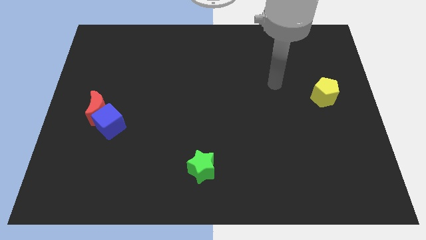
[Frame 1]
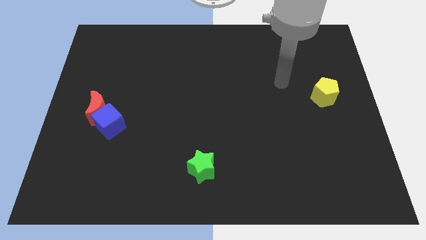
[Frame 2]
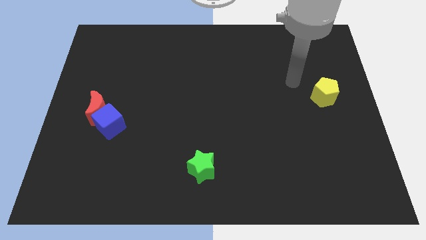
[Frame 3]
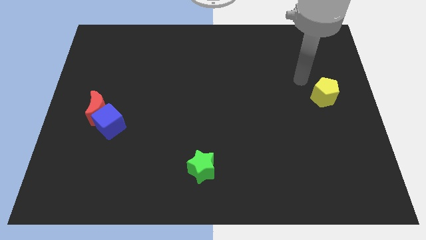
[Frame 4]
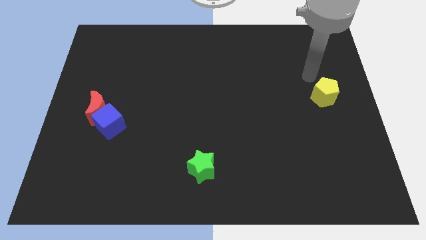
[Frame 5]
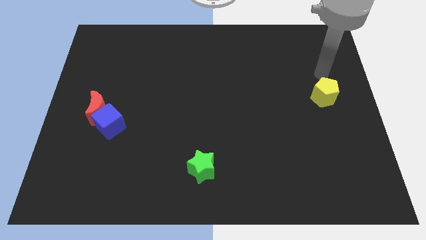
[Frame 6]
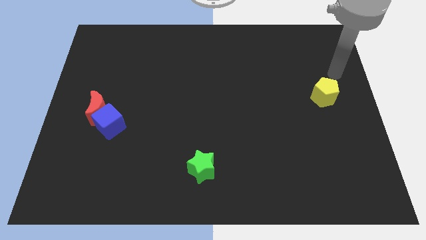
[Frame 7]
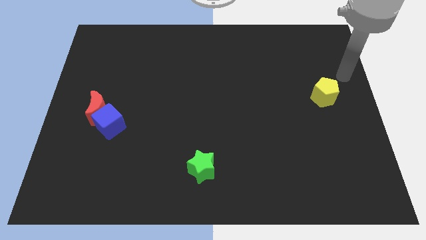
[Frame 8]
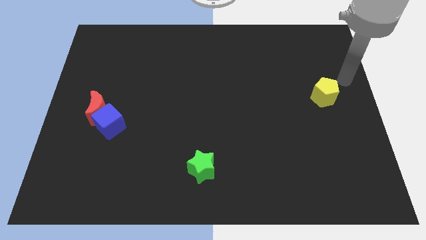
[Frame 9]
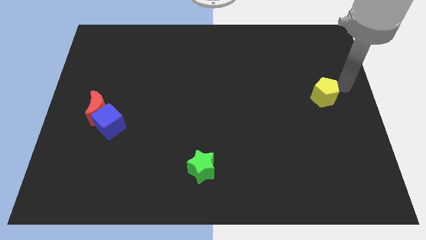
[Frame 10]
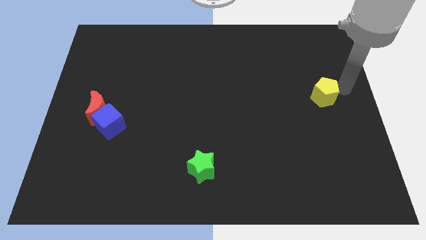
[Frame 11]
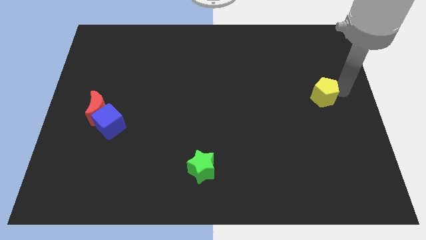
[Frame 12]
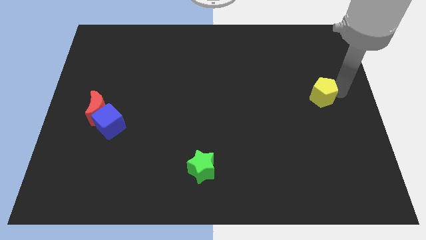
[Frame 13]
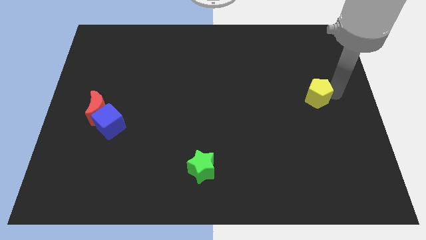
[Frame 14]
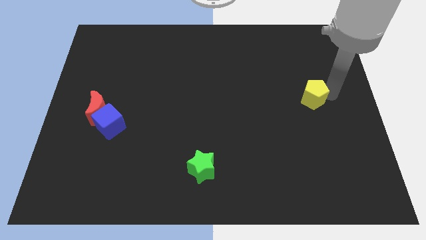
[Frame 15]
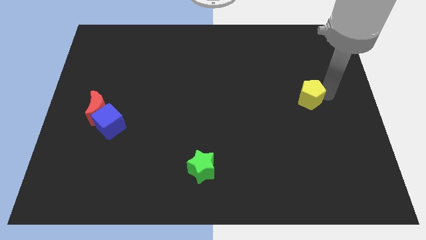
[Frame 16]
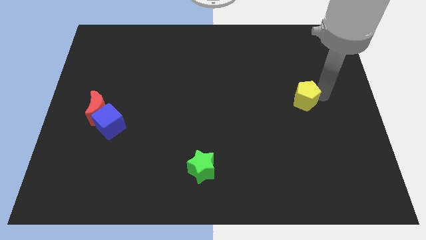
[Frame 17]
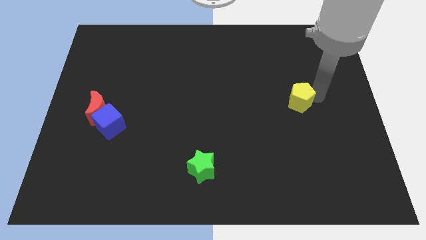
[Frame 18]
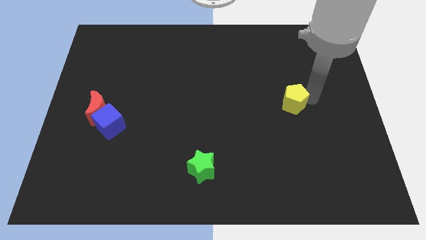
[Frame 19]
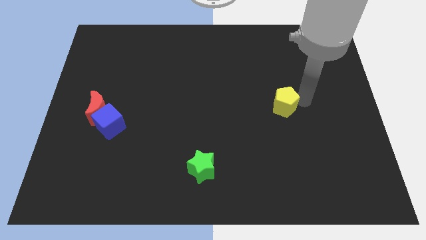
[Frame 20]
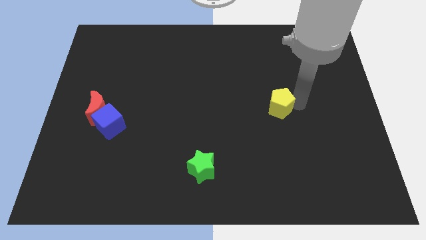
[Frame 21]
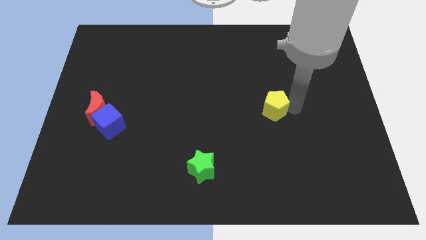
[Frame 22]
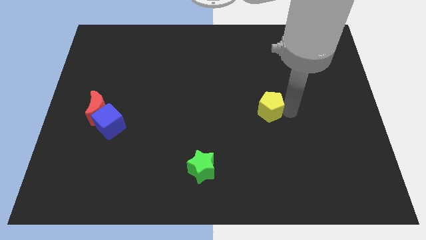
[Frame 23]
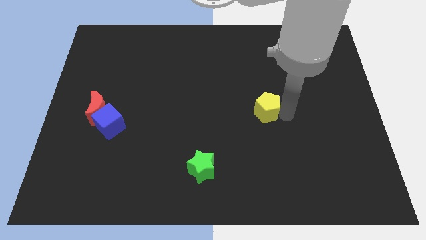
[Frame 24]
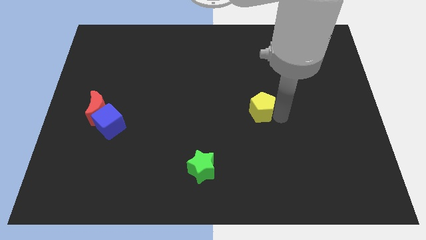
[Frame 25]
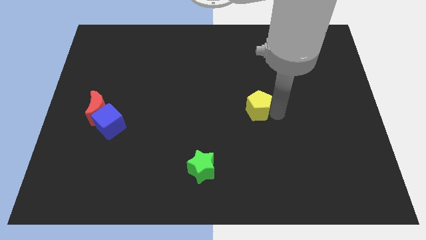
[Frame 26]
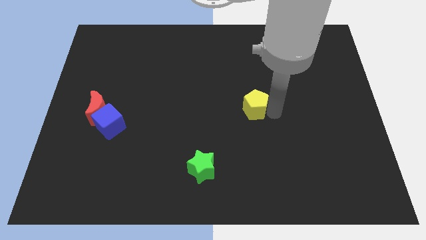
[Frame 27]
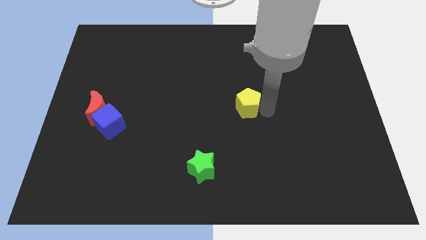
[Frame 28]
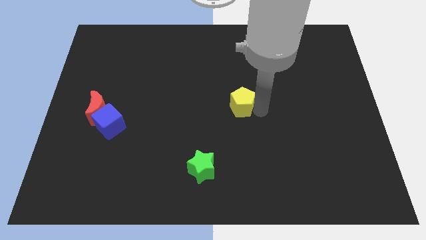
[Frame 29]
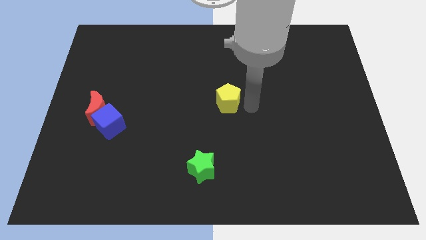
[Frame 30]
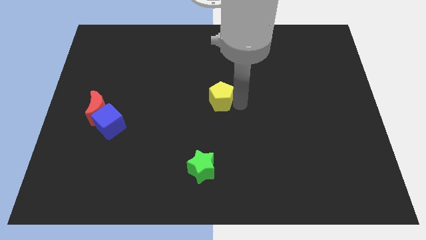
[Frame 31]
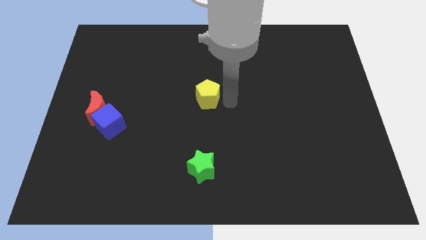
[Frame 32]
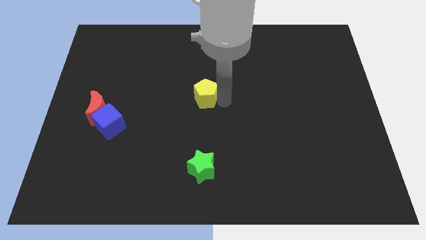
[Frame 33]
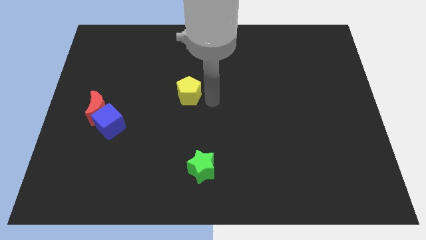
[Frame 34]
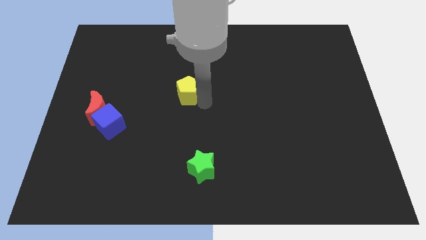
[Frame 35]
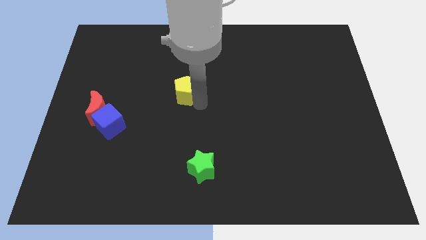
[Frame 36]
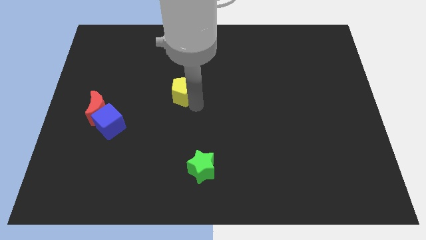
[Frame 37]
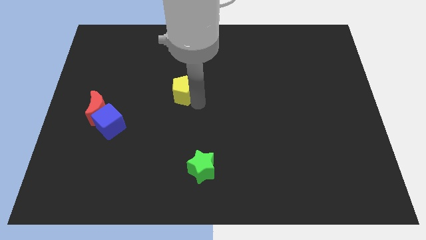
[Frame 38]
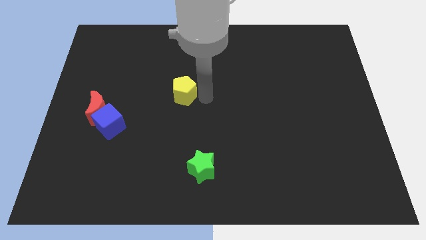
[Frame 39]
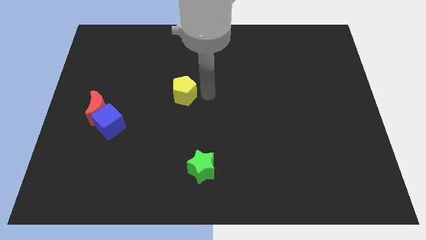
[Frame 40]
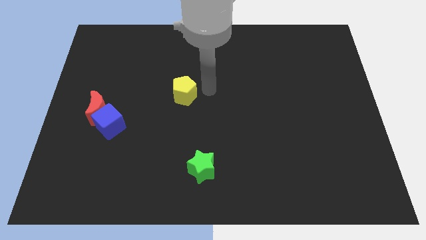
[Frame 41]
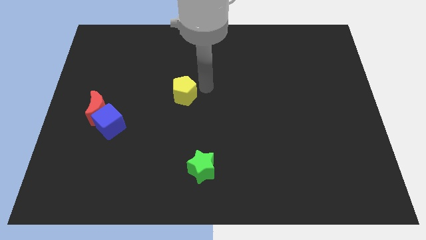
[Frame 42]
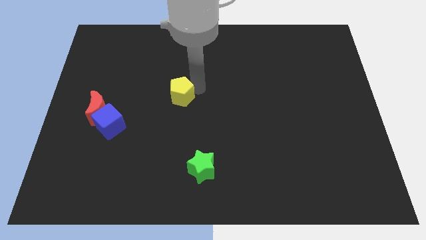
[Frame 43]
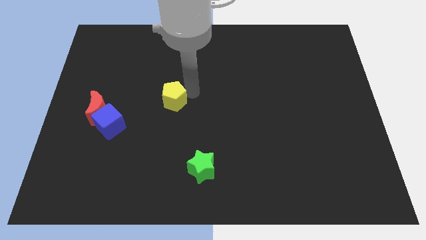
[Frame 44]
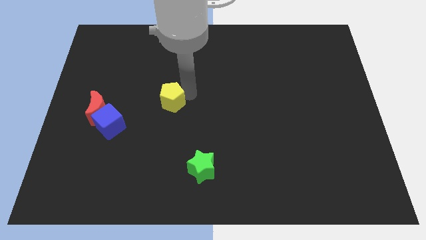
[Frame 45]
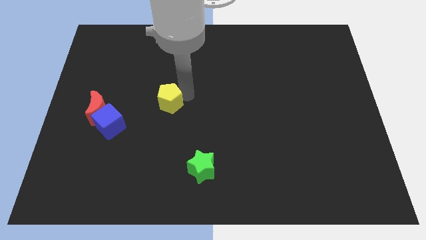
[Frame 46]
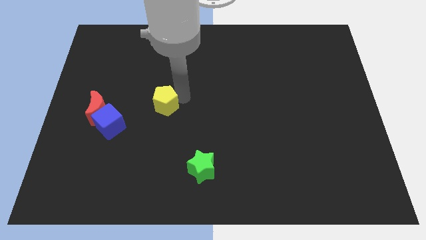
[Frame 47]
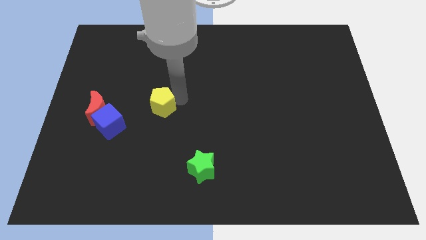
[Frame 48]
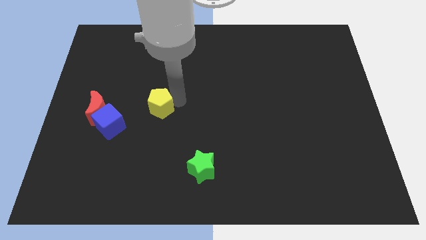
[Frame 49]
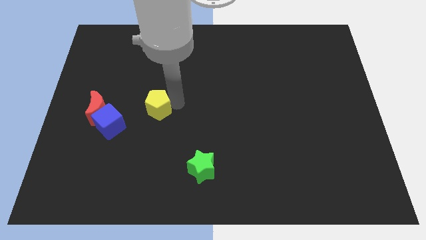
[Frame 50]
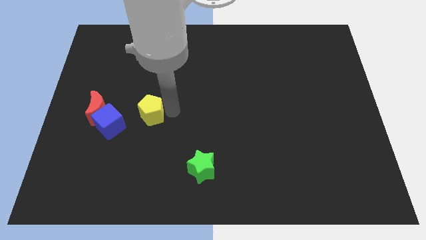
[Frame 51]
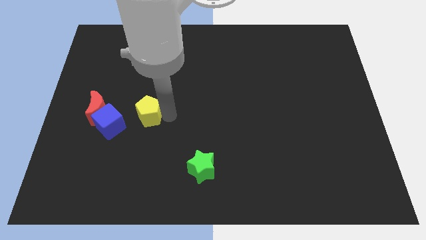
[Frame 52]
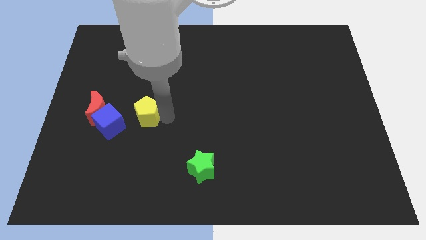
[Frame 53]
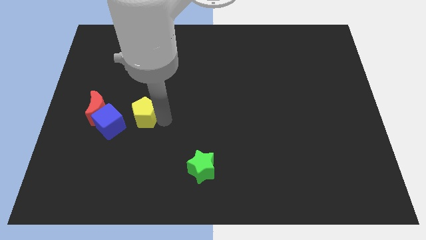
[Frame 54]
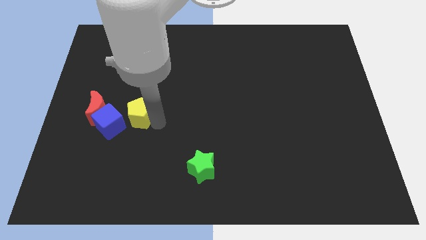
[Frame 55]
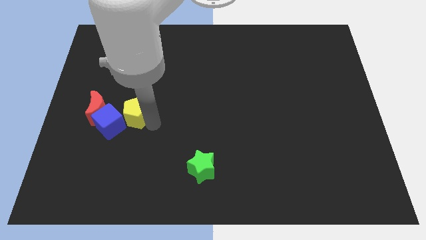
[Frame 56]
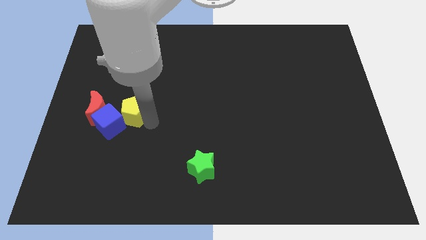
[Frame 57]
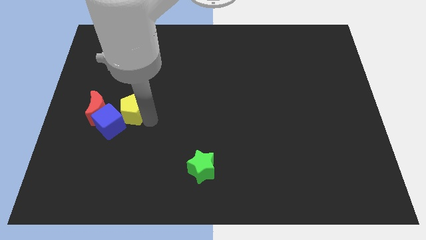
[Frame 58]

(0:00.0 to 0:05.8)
move the yellow pentagon close to the blue cube

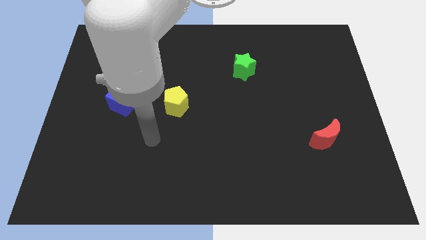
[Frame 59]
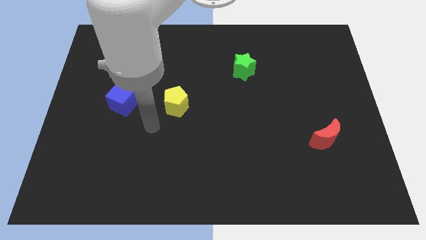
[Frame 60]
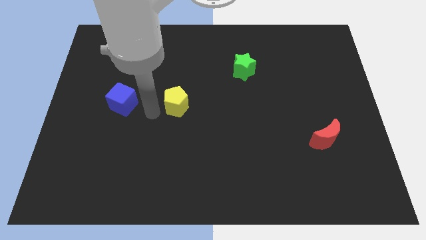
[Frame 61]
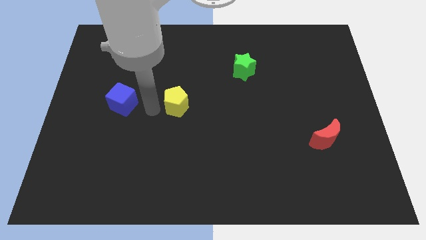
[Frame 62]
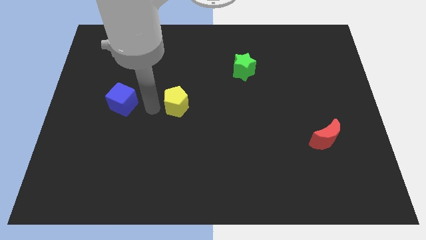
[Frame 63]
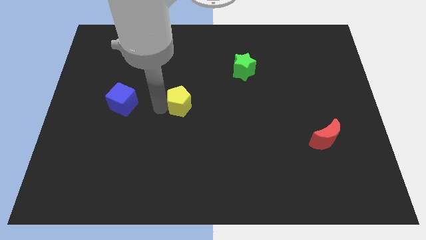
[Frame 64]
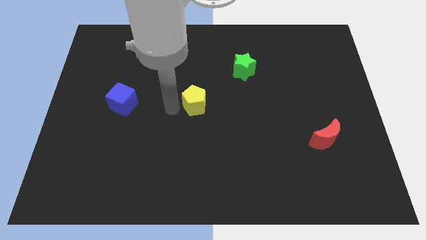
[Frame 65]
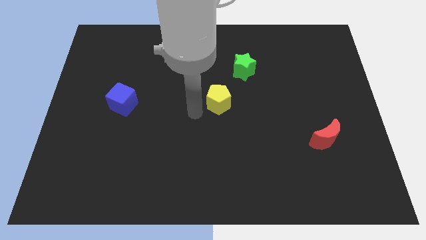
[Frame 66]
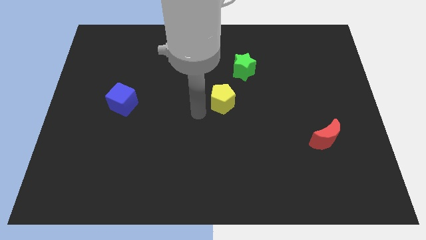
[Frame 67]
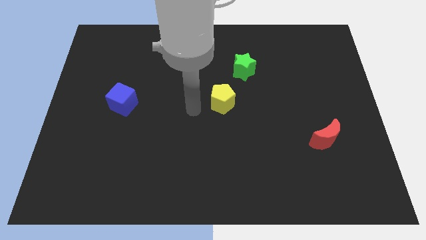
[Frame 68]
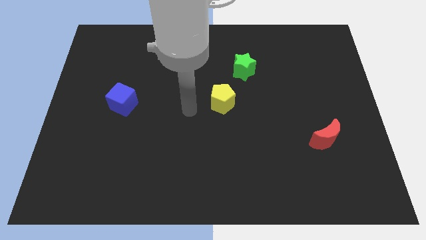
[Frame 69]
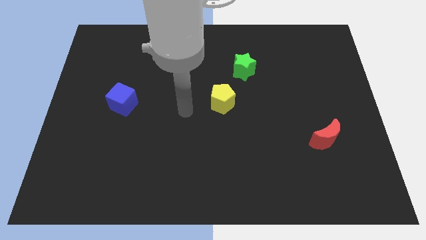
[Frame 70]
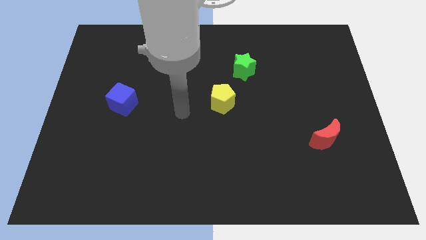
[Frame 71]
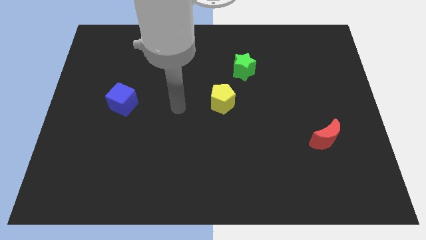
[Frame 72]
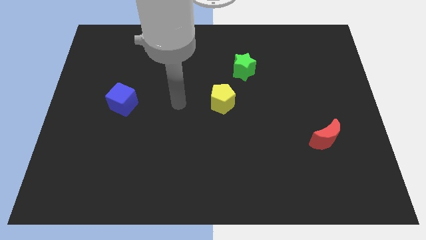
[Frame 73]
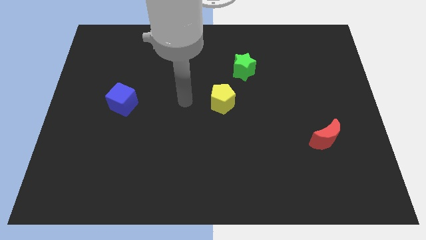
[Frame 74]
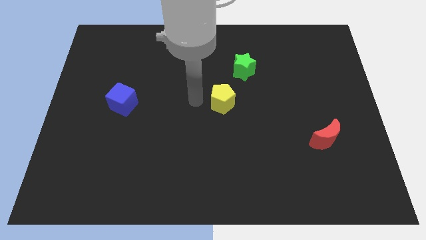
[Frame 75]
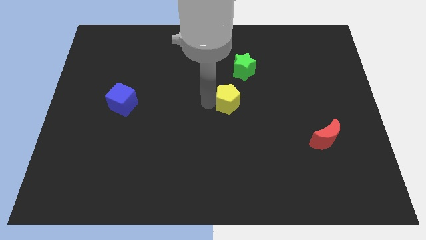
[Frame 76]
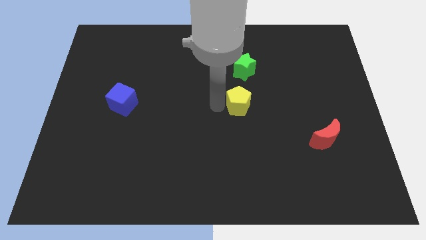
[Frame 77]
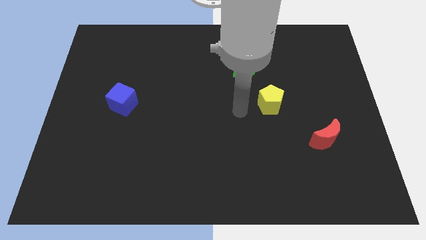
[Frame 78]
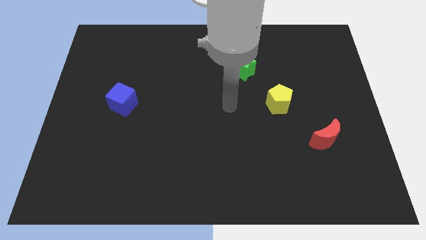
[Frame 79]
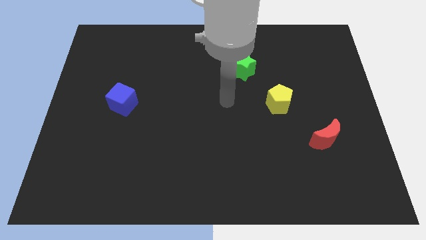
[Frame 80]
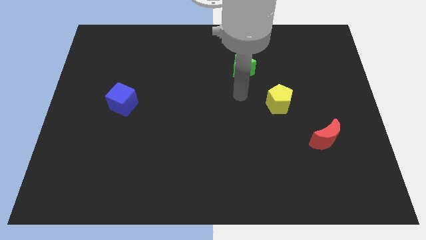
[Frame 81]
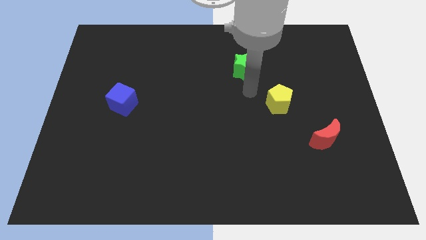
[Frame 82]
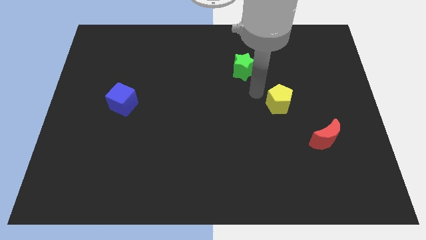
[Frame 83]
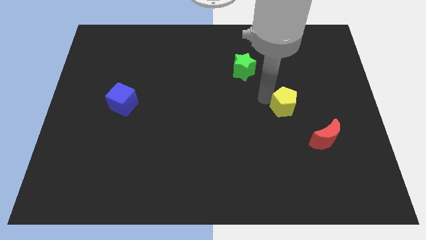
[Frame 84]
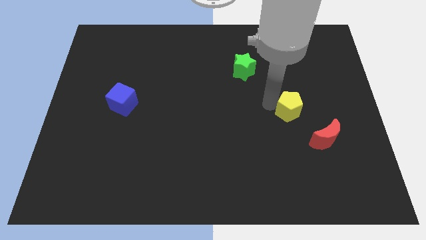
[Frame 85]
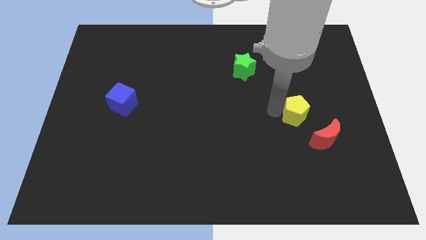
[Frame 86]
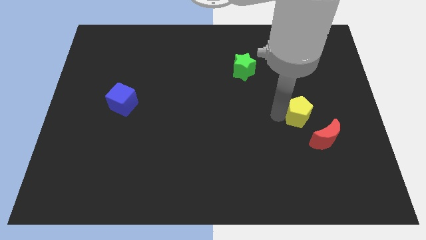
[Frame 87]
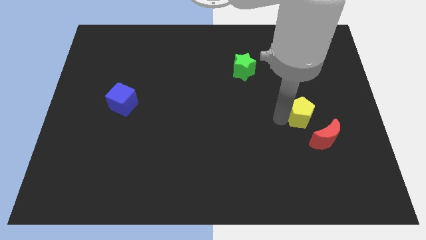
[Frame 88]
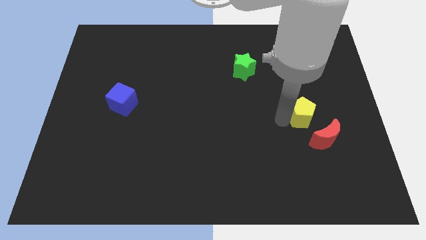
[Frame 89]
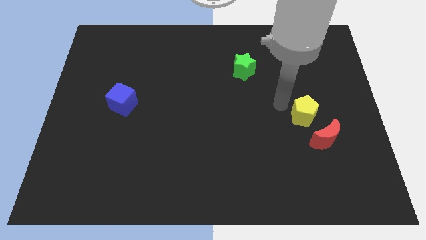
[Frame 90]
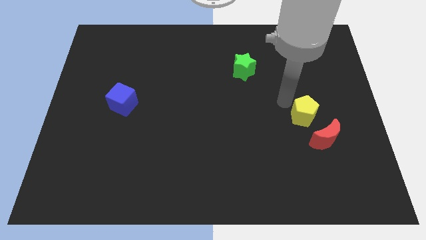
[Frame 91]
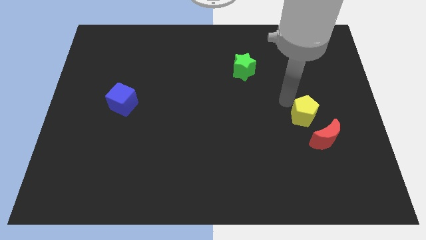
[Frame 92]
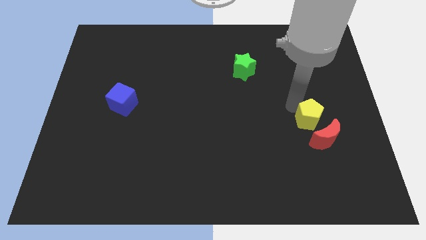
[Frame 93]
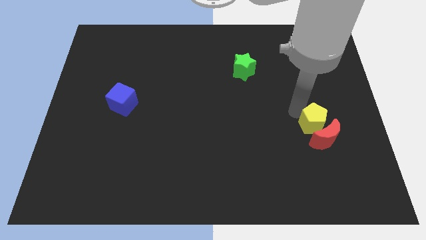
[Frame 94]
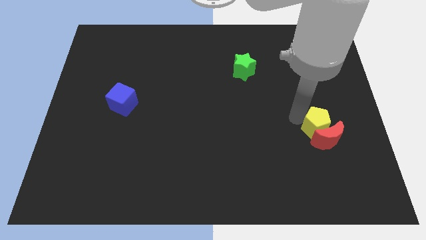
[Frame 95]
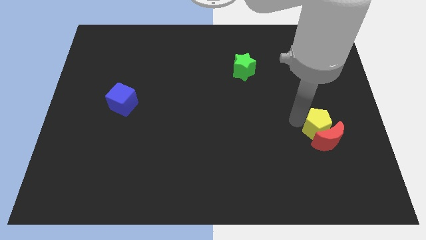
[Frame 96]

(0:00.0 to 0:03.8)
slide the pentagon next to the red moon
